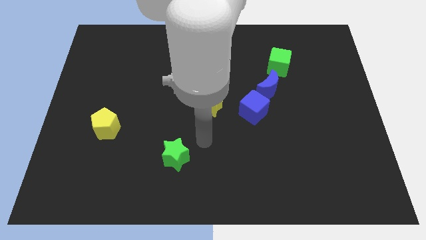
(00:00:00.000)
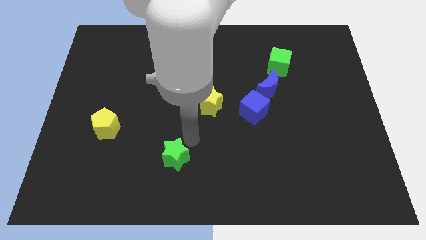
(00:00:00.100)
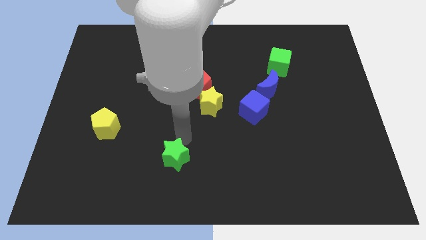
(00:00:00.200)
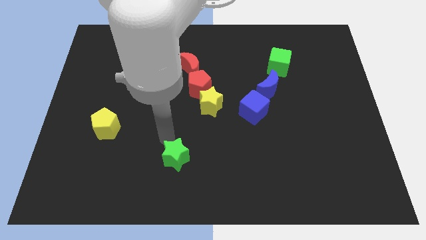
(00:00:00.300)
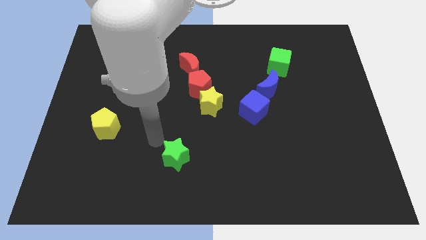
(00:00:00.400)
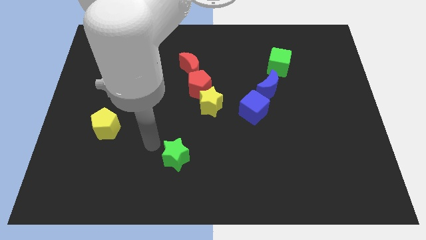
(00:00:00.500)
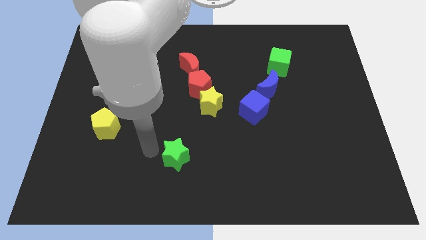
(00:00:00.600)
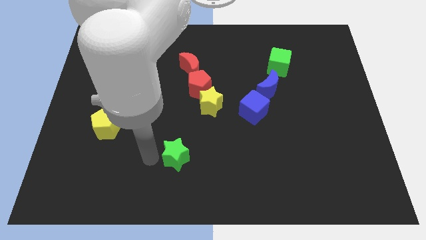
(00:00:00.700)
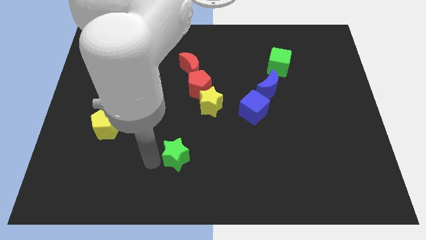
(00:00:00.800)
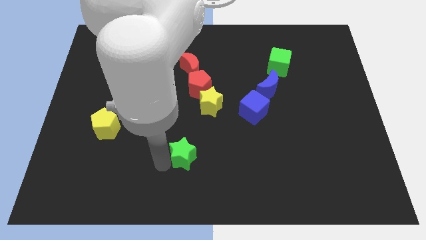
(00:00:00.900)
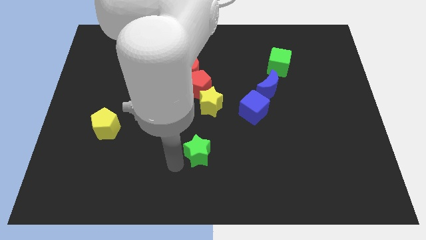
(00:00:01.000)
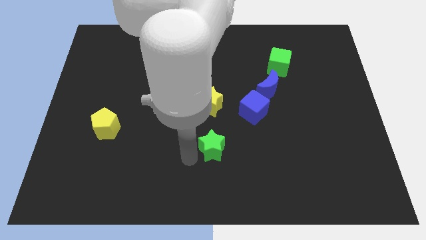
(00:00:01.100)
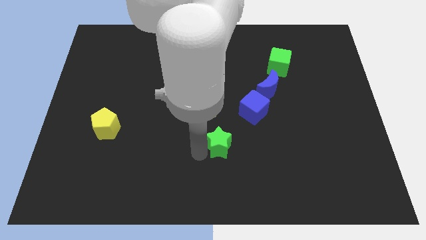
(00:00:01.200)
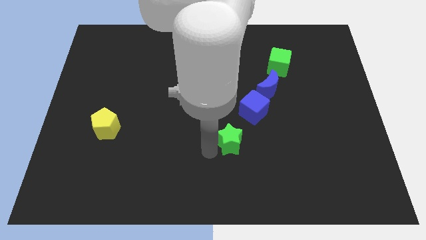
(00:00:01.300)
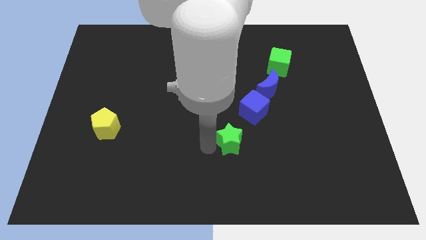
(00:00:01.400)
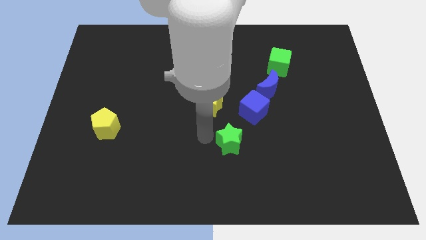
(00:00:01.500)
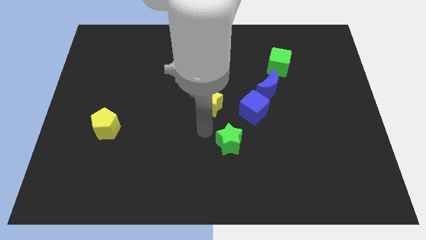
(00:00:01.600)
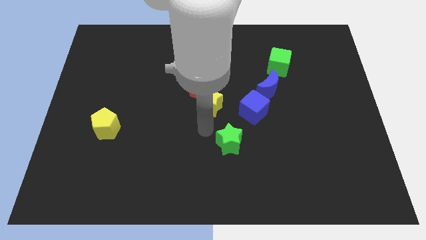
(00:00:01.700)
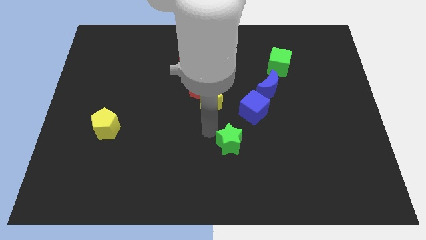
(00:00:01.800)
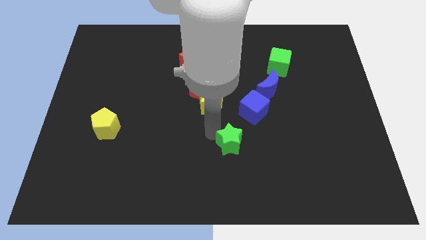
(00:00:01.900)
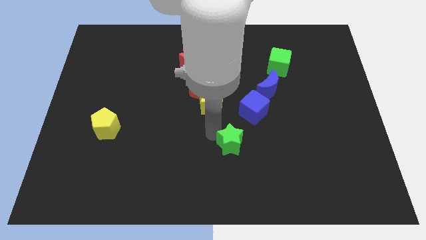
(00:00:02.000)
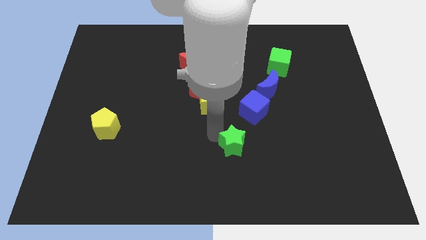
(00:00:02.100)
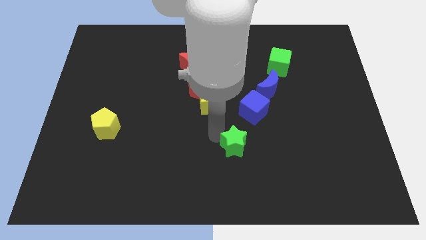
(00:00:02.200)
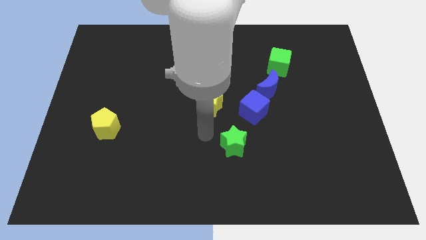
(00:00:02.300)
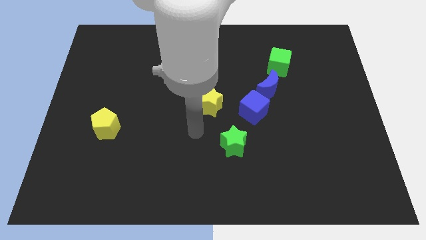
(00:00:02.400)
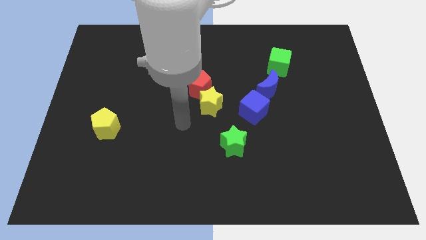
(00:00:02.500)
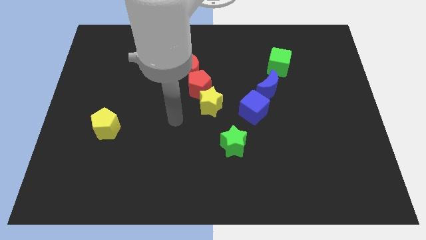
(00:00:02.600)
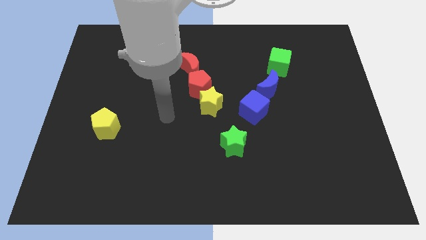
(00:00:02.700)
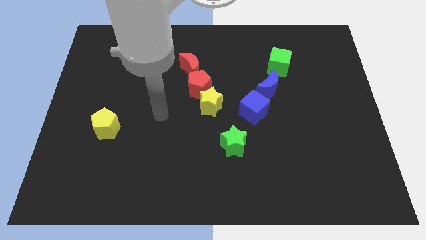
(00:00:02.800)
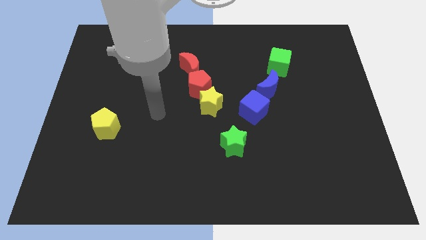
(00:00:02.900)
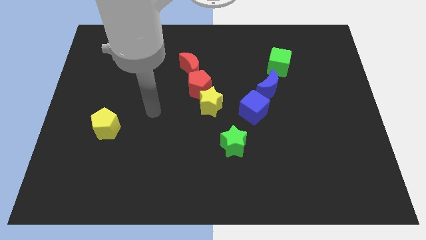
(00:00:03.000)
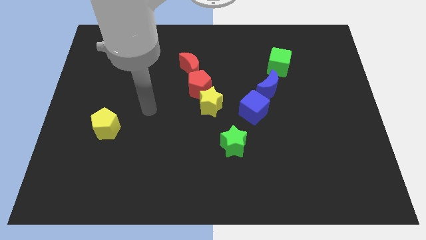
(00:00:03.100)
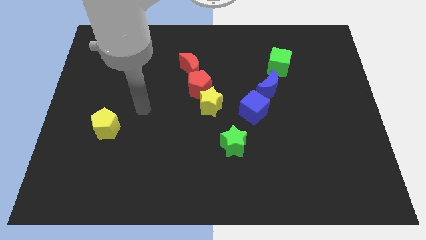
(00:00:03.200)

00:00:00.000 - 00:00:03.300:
move green star towards the blue cube

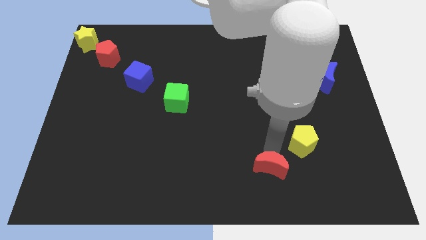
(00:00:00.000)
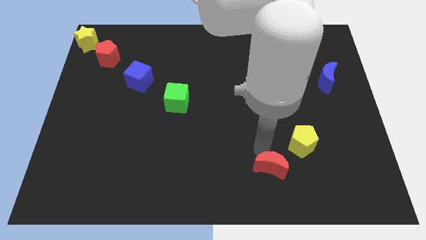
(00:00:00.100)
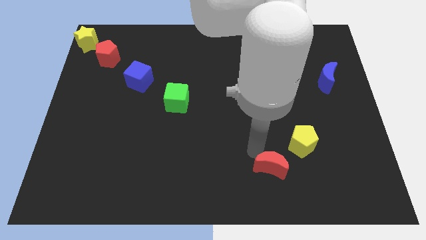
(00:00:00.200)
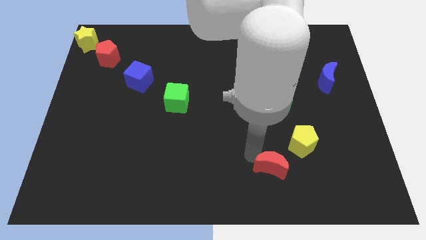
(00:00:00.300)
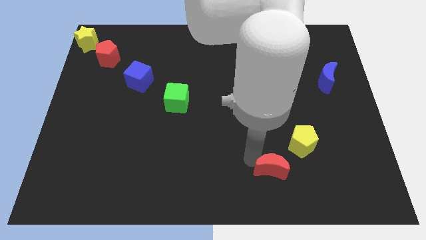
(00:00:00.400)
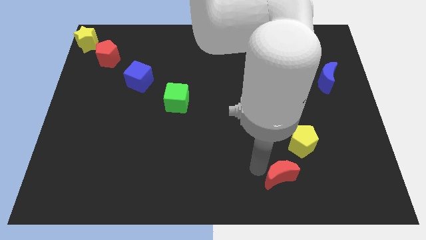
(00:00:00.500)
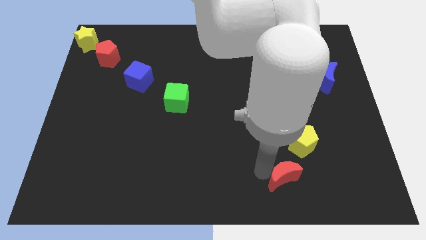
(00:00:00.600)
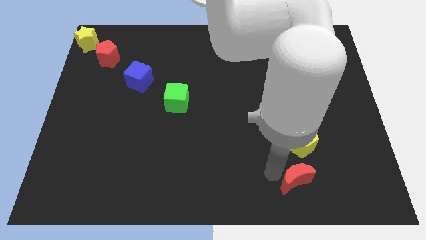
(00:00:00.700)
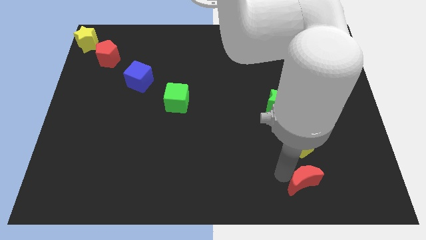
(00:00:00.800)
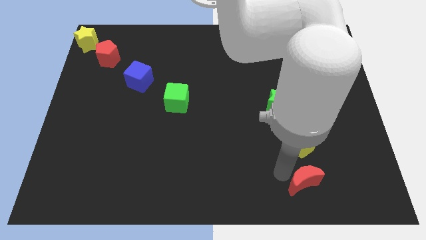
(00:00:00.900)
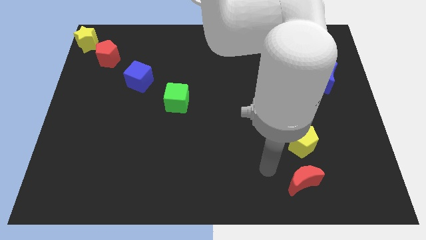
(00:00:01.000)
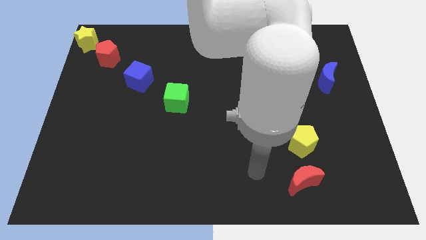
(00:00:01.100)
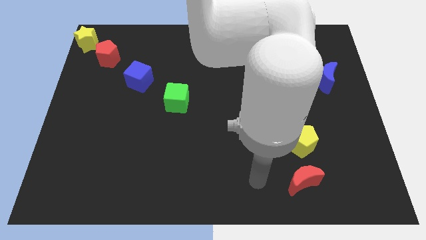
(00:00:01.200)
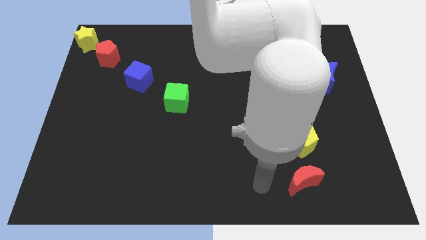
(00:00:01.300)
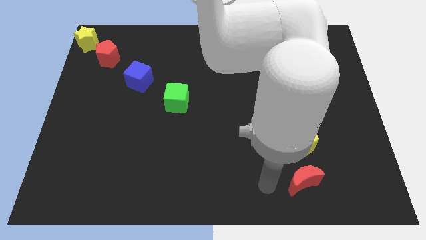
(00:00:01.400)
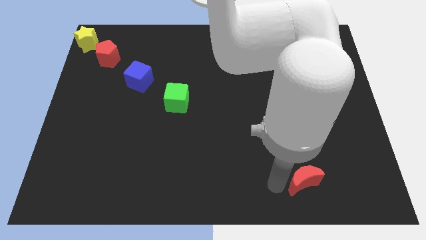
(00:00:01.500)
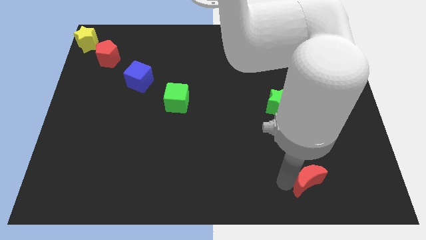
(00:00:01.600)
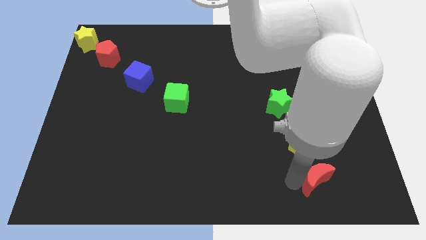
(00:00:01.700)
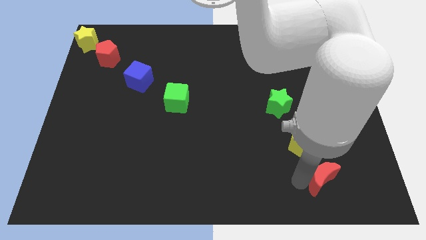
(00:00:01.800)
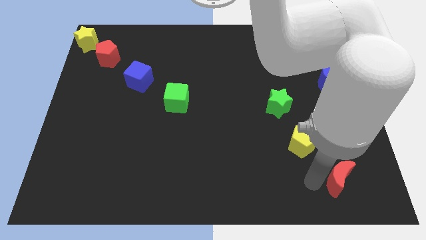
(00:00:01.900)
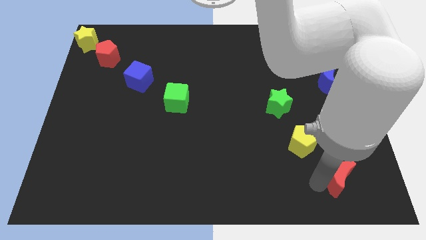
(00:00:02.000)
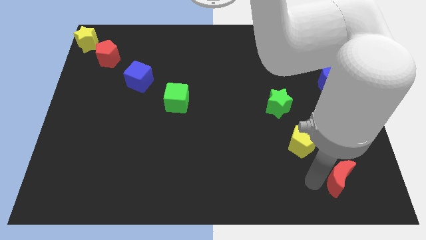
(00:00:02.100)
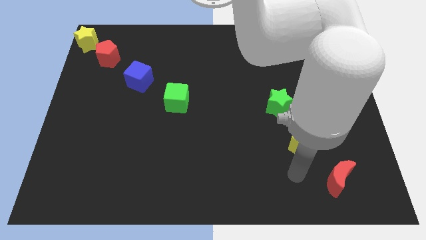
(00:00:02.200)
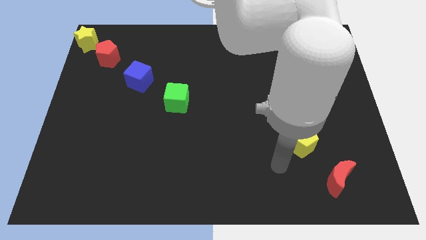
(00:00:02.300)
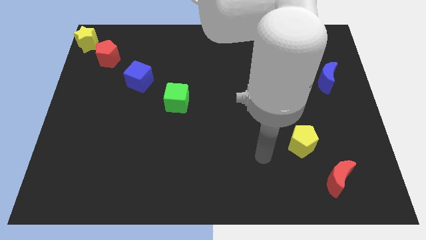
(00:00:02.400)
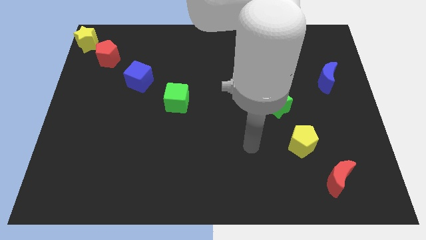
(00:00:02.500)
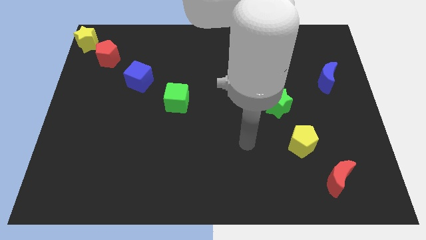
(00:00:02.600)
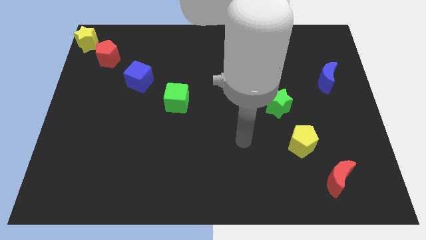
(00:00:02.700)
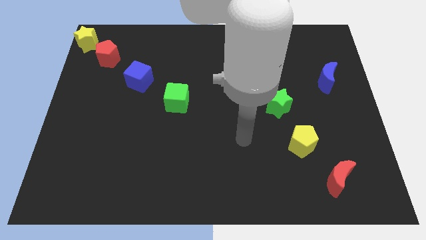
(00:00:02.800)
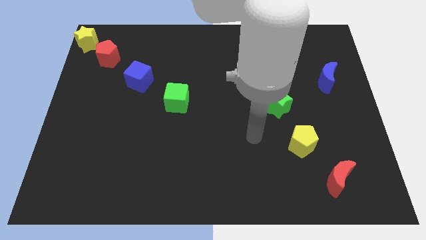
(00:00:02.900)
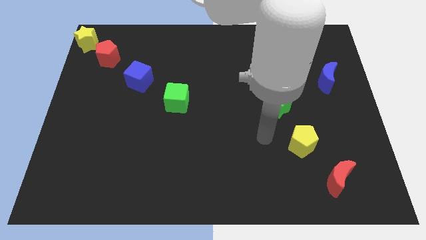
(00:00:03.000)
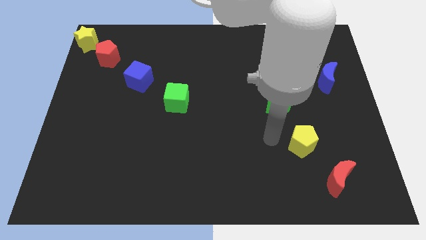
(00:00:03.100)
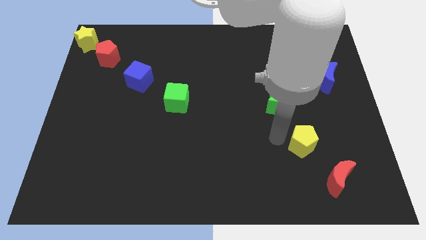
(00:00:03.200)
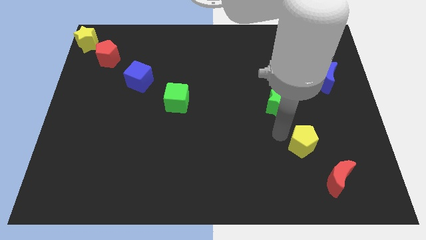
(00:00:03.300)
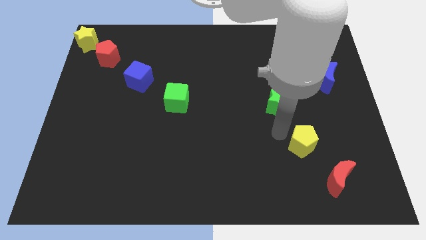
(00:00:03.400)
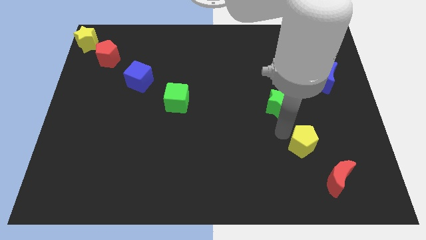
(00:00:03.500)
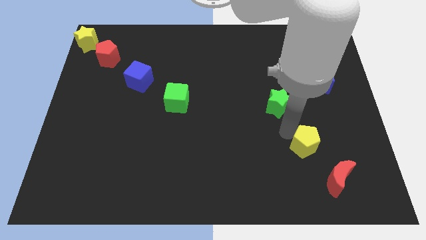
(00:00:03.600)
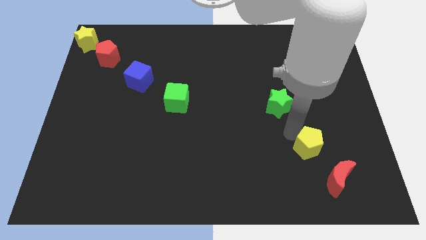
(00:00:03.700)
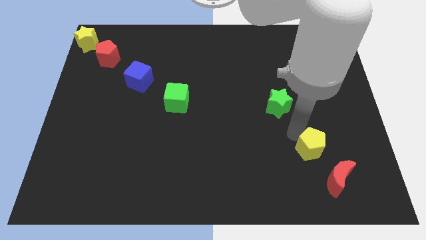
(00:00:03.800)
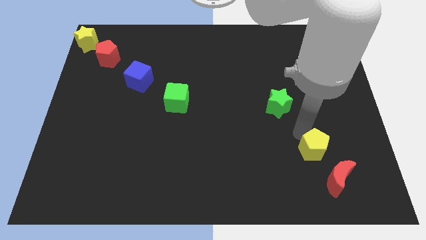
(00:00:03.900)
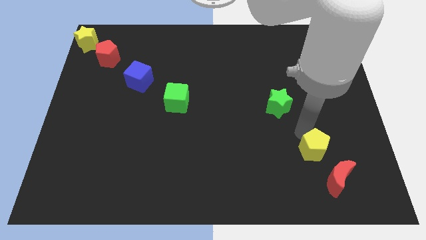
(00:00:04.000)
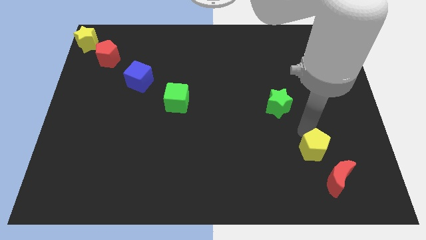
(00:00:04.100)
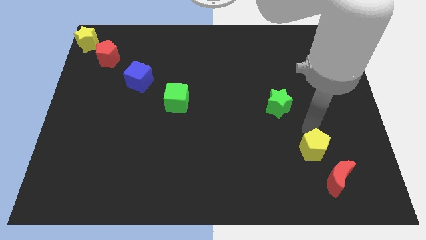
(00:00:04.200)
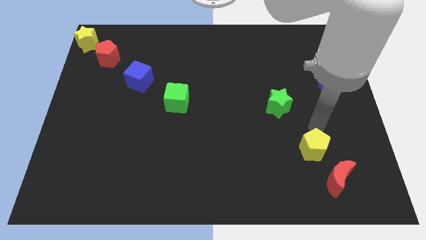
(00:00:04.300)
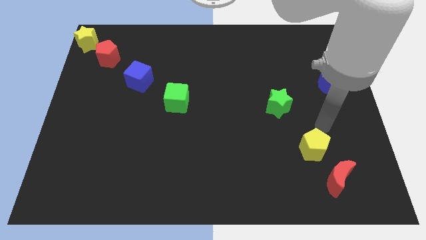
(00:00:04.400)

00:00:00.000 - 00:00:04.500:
push yellow pentagon towards the top left of the red moon

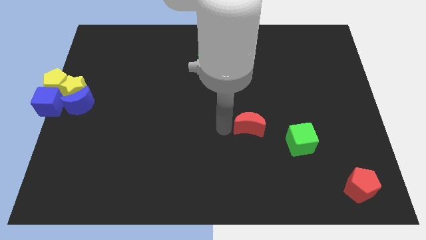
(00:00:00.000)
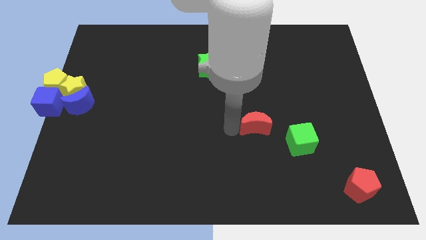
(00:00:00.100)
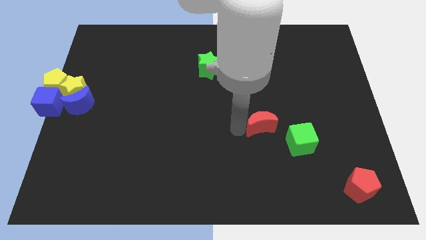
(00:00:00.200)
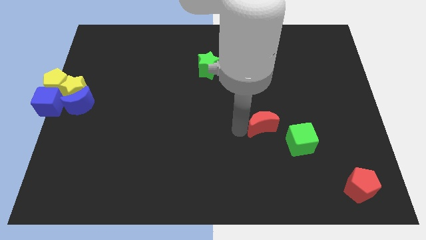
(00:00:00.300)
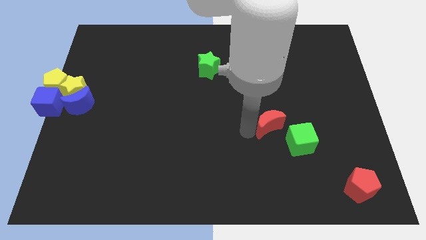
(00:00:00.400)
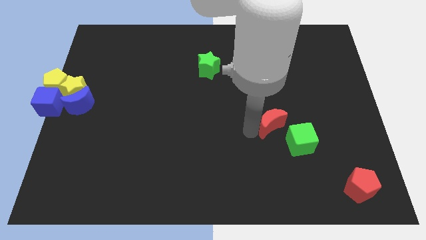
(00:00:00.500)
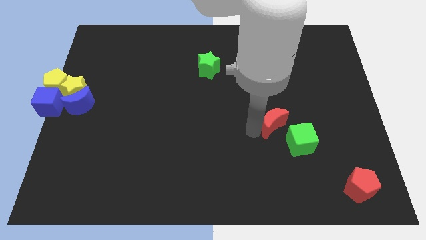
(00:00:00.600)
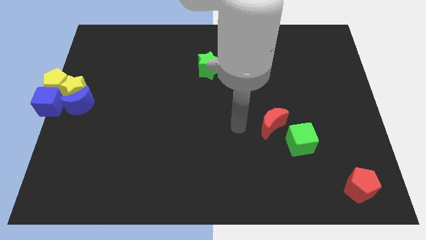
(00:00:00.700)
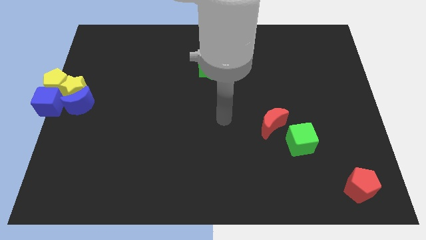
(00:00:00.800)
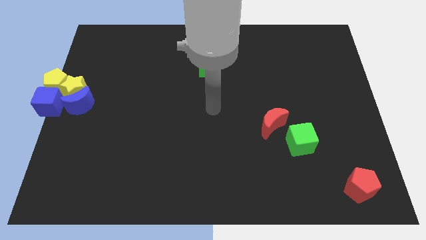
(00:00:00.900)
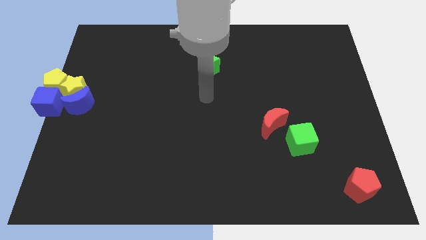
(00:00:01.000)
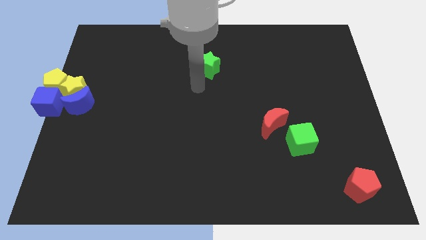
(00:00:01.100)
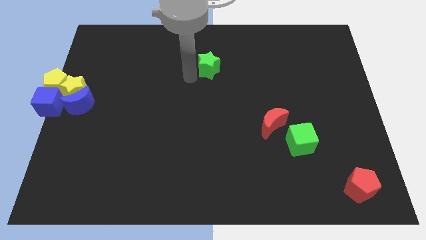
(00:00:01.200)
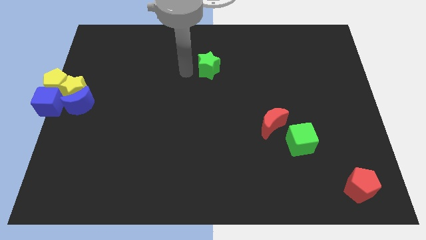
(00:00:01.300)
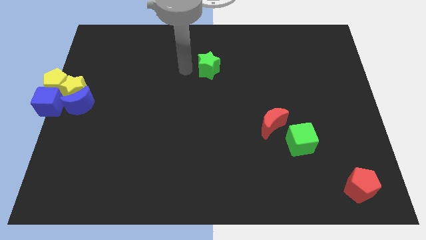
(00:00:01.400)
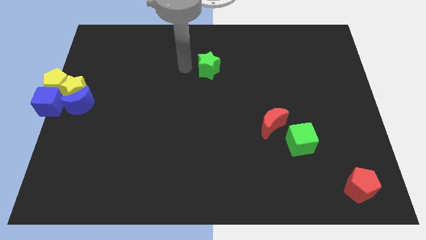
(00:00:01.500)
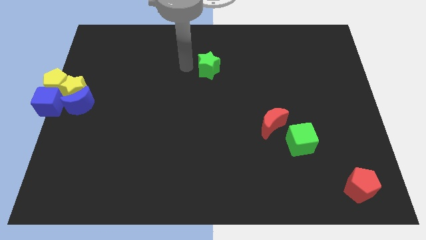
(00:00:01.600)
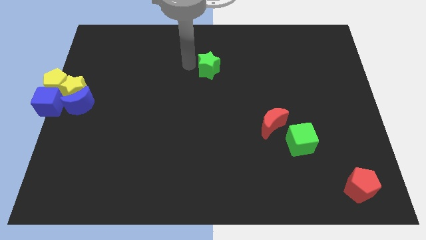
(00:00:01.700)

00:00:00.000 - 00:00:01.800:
push the red crescent towards the green cube
